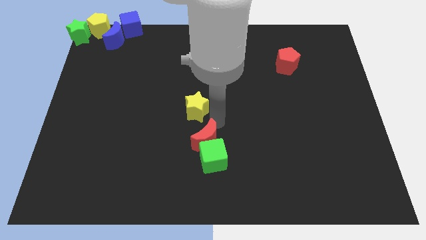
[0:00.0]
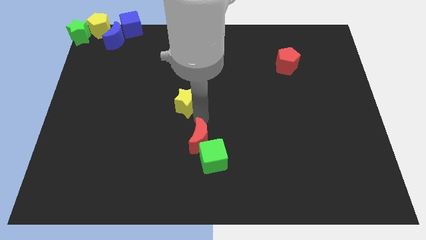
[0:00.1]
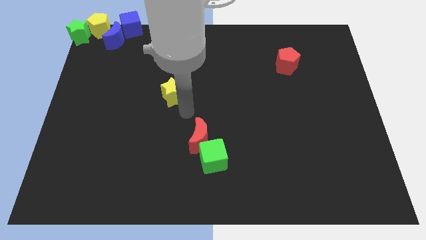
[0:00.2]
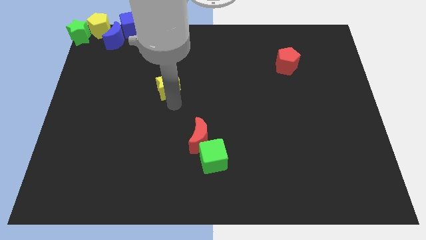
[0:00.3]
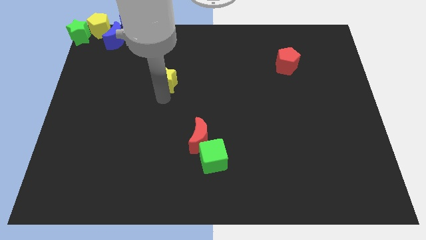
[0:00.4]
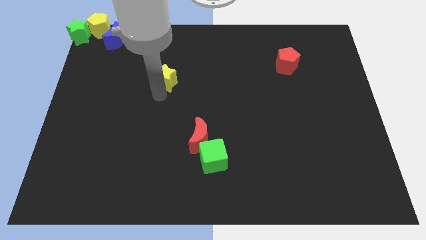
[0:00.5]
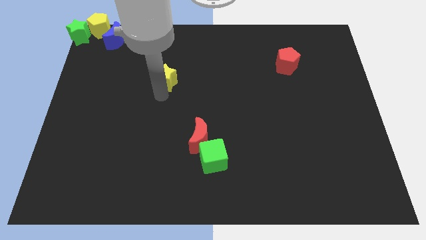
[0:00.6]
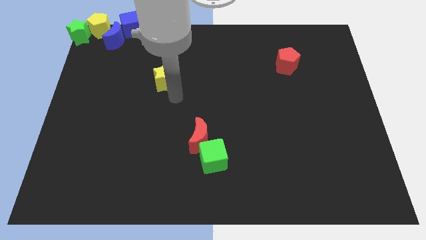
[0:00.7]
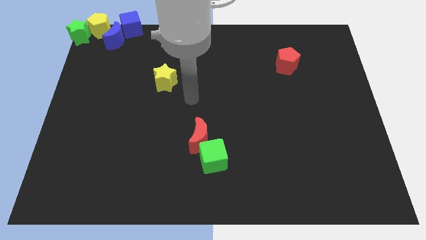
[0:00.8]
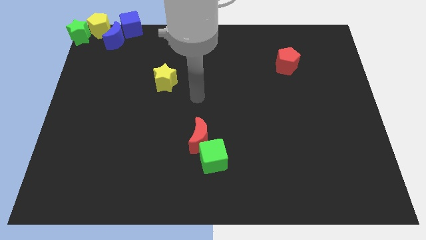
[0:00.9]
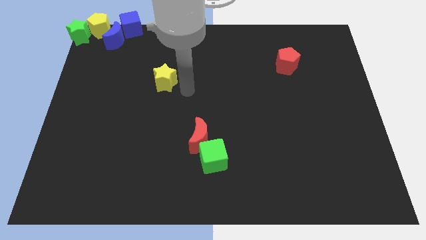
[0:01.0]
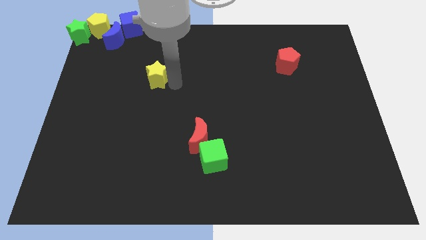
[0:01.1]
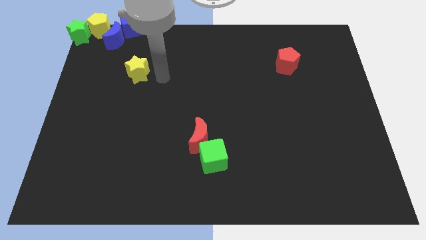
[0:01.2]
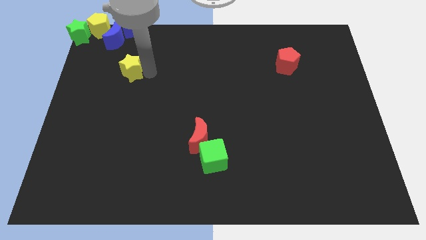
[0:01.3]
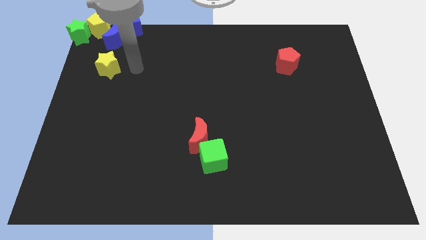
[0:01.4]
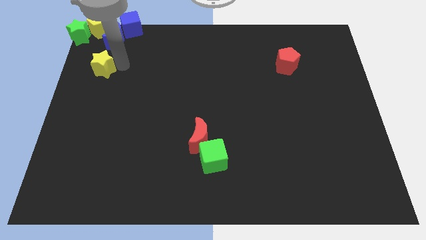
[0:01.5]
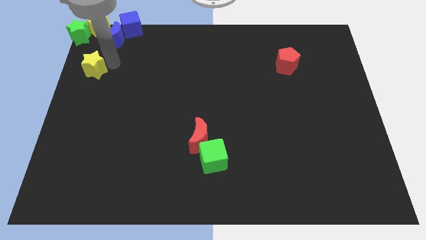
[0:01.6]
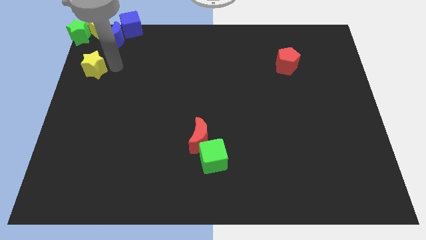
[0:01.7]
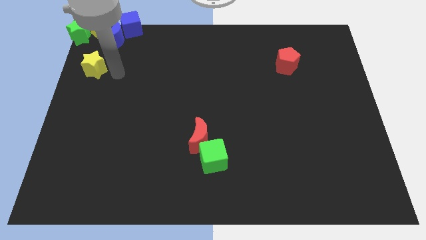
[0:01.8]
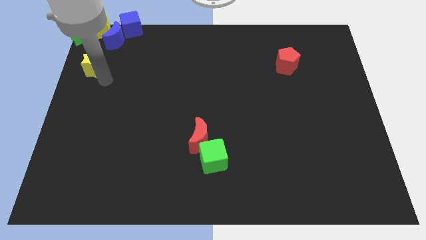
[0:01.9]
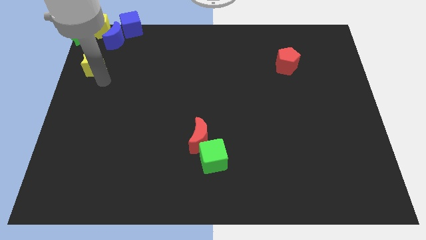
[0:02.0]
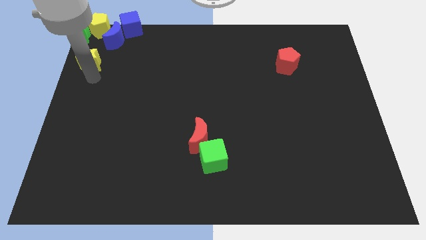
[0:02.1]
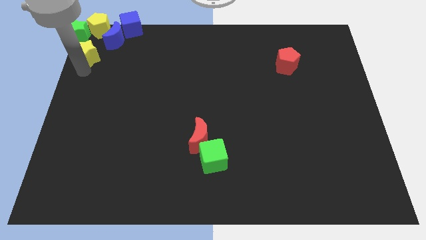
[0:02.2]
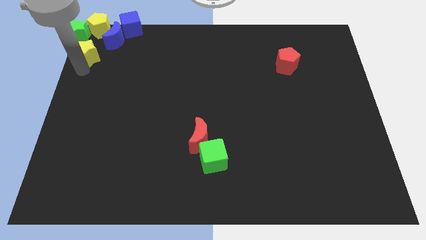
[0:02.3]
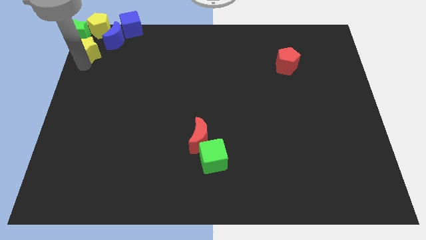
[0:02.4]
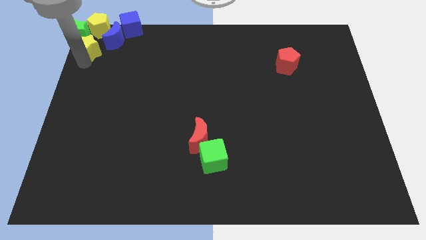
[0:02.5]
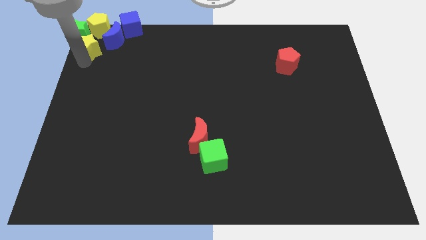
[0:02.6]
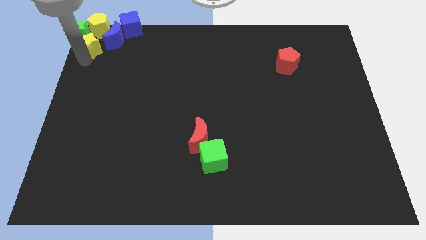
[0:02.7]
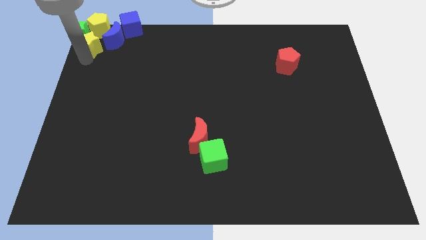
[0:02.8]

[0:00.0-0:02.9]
push the yellow star to the bottom of the yellow pentagon

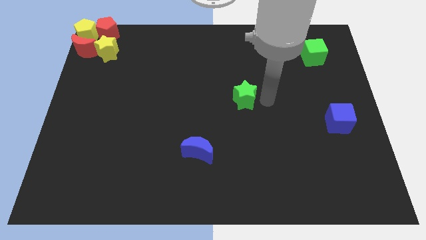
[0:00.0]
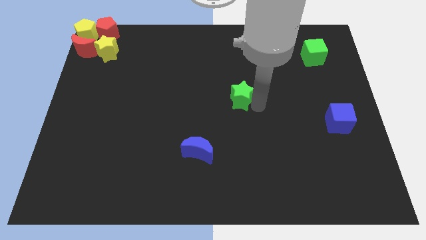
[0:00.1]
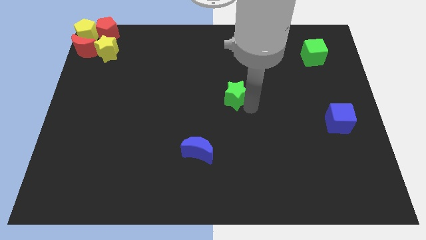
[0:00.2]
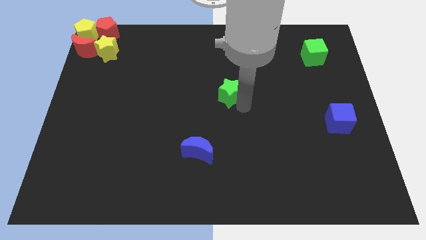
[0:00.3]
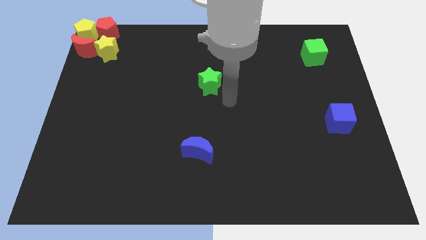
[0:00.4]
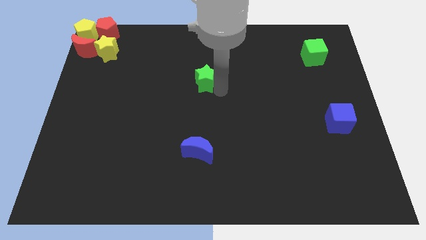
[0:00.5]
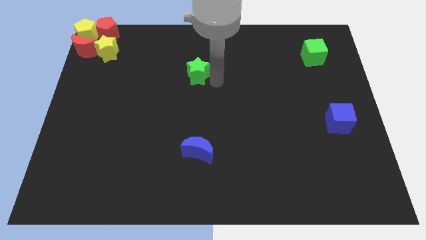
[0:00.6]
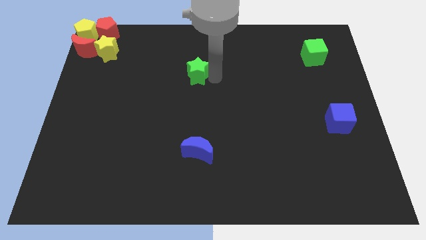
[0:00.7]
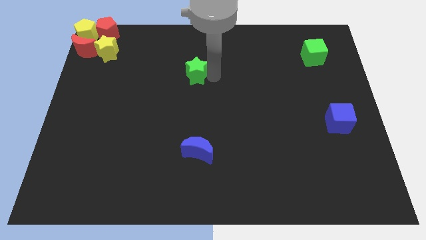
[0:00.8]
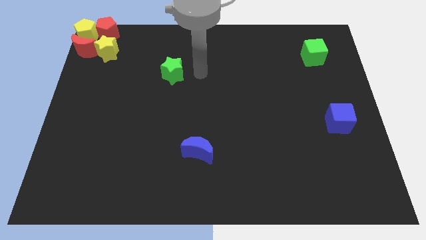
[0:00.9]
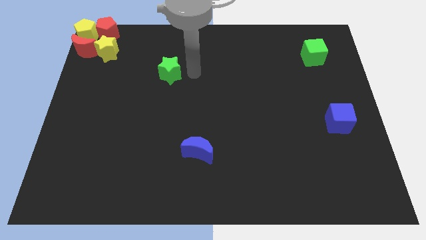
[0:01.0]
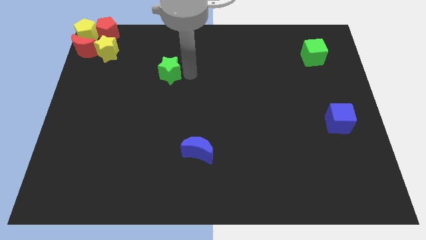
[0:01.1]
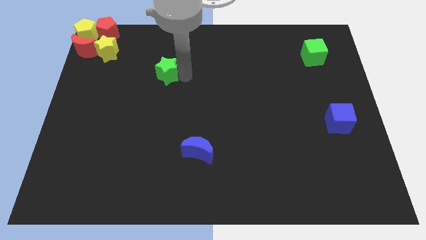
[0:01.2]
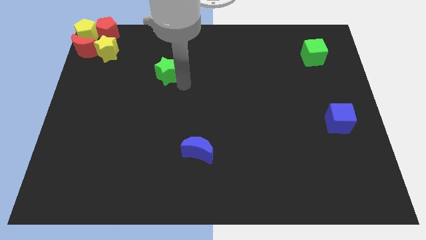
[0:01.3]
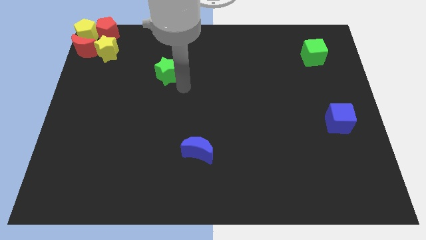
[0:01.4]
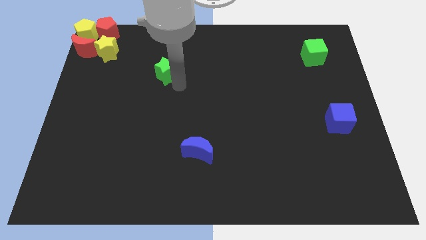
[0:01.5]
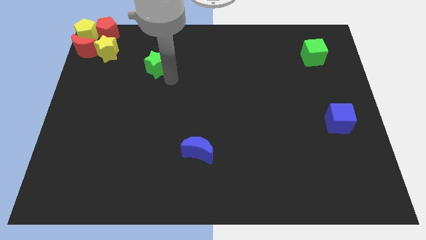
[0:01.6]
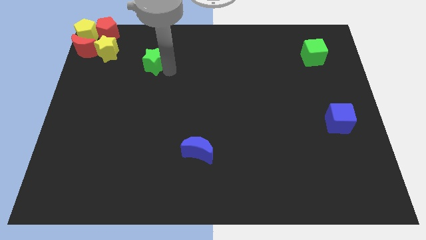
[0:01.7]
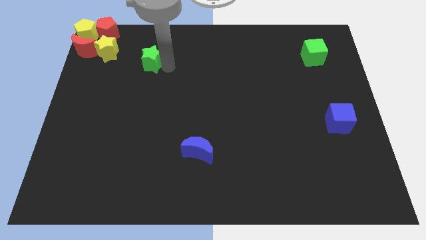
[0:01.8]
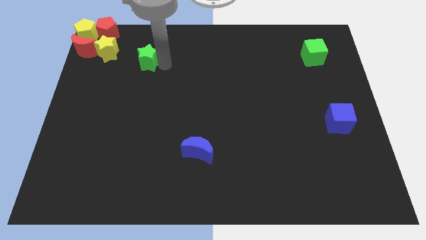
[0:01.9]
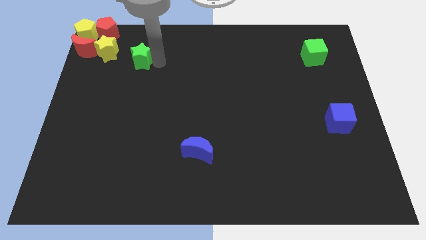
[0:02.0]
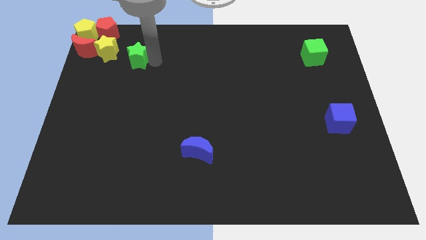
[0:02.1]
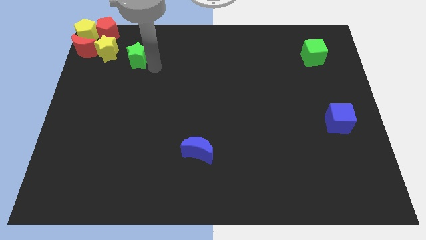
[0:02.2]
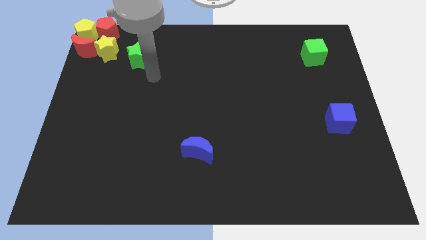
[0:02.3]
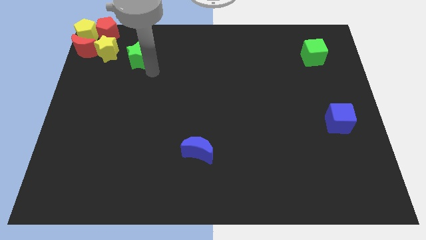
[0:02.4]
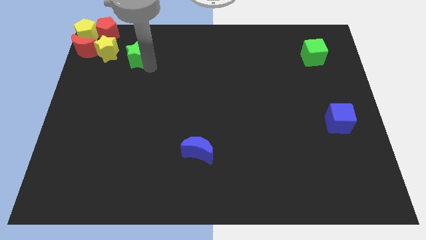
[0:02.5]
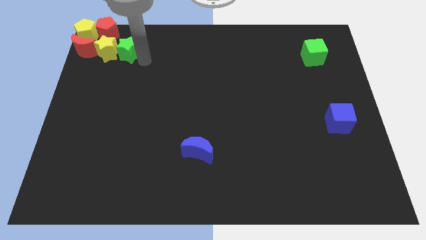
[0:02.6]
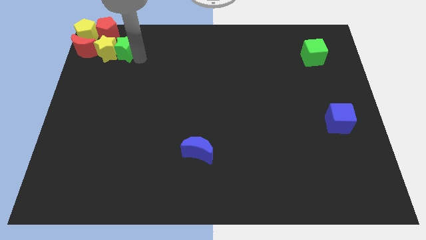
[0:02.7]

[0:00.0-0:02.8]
push the green star to the right of the yellow star

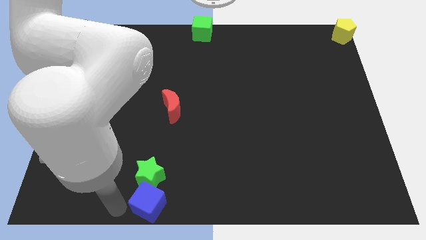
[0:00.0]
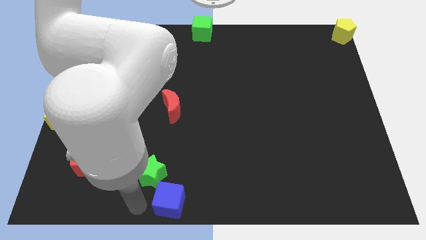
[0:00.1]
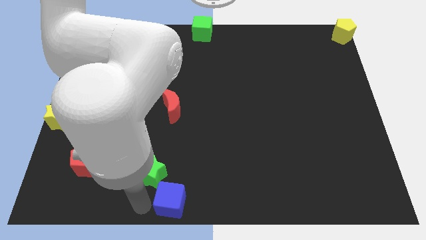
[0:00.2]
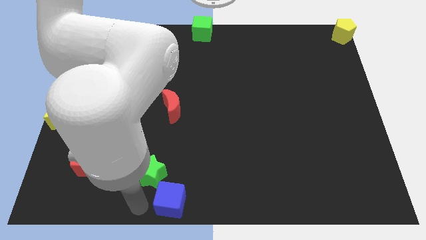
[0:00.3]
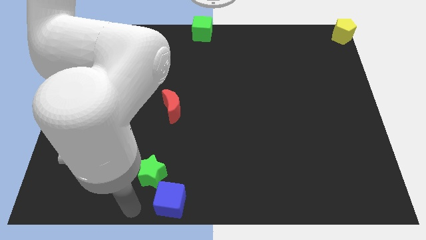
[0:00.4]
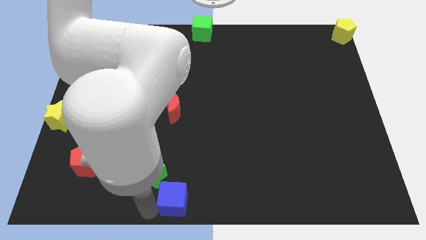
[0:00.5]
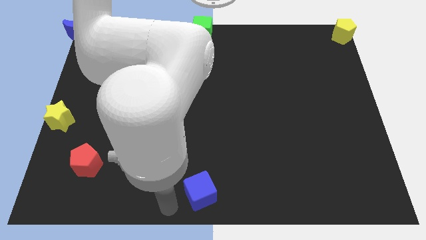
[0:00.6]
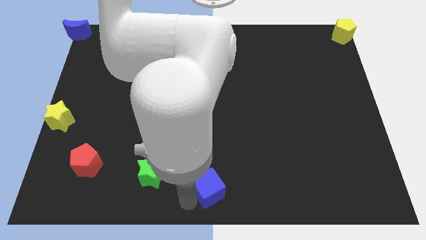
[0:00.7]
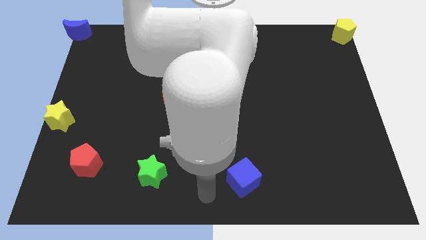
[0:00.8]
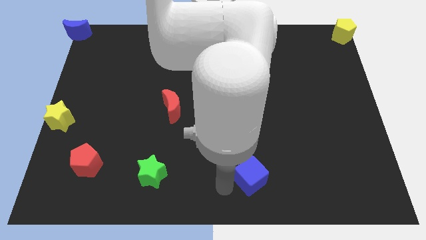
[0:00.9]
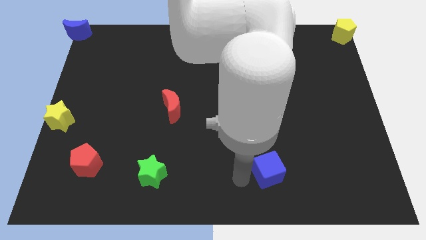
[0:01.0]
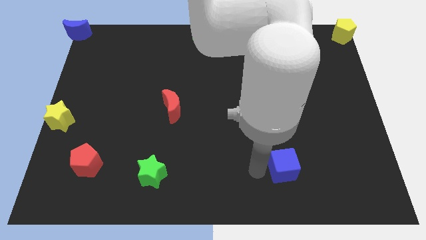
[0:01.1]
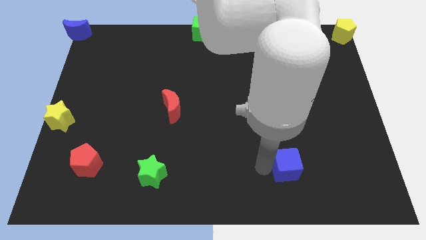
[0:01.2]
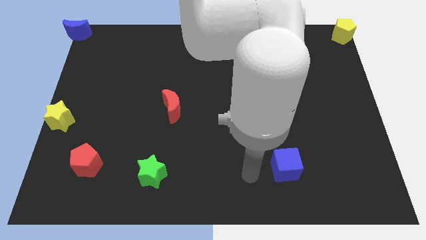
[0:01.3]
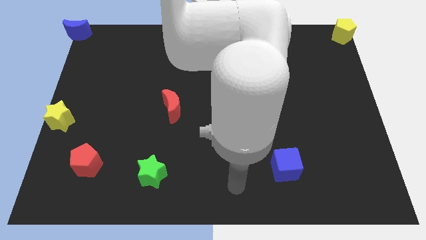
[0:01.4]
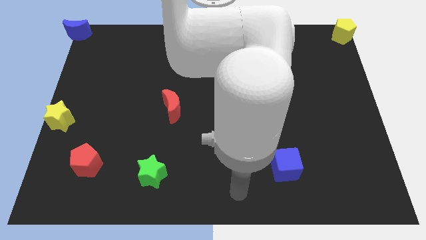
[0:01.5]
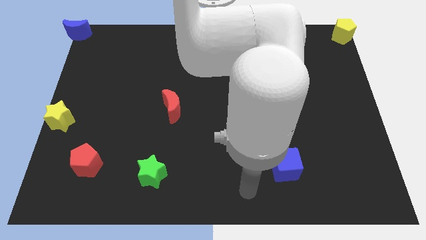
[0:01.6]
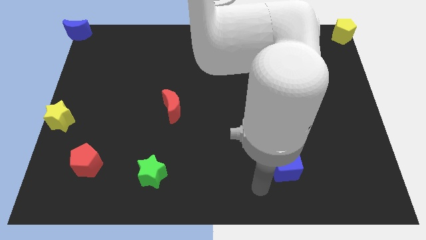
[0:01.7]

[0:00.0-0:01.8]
push the blue cube towards the bottom right of the board

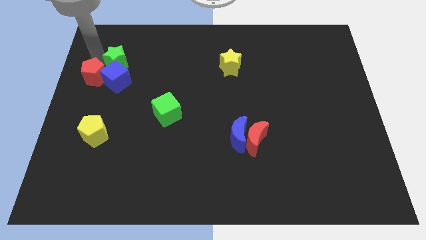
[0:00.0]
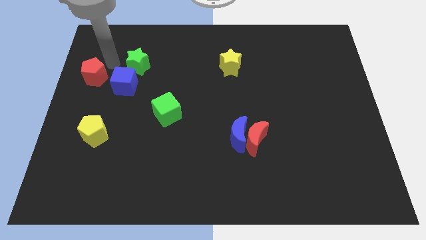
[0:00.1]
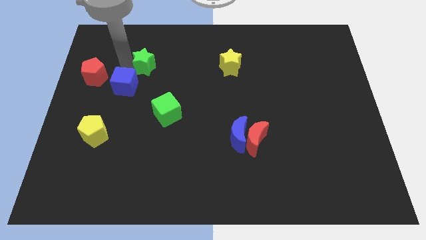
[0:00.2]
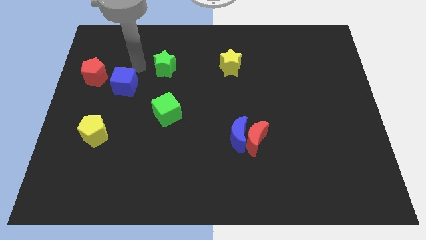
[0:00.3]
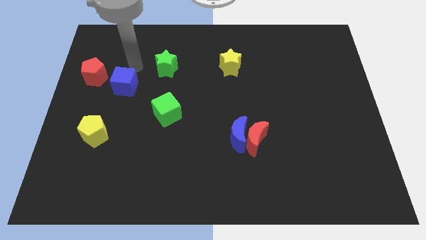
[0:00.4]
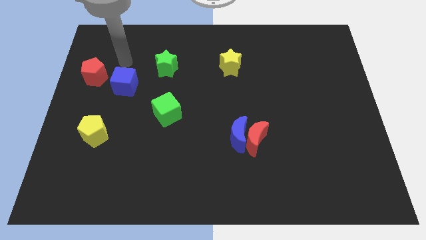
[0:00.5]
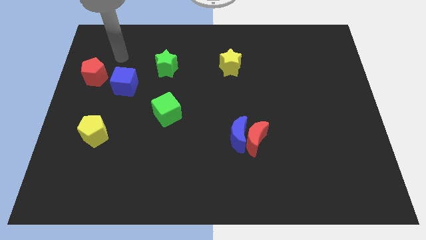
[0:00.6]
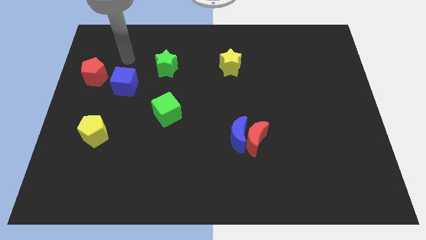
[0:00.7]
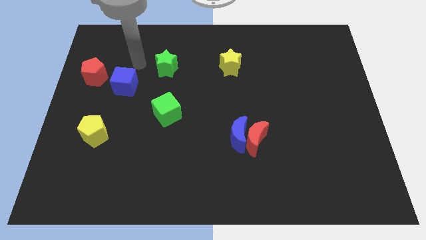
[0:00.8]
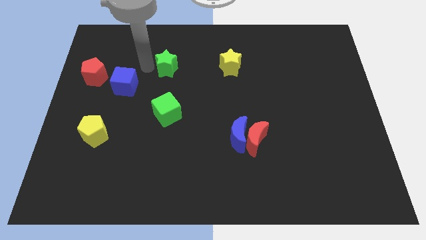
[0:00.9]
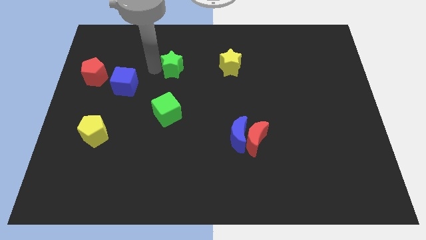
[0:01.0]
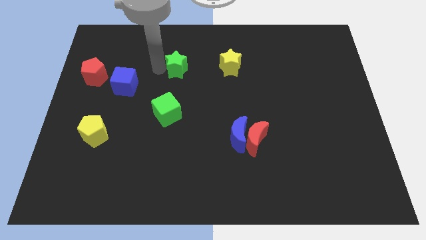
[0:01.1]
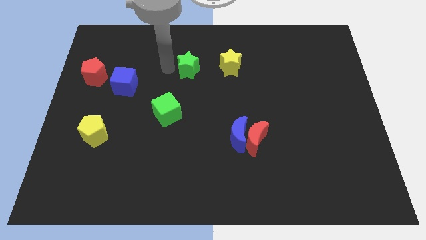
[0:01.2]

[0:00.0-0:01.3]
push the green star slightly to the right
